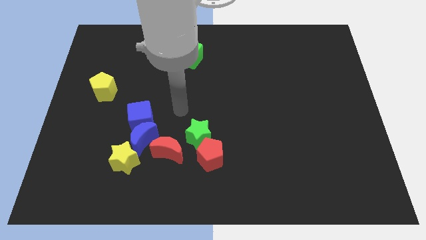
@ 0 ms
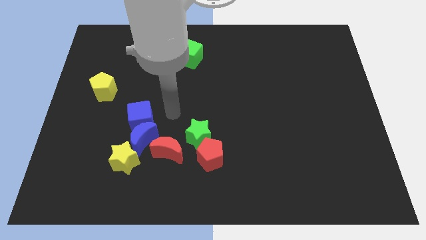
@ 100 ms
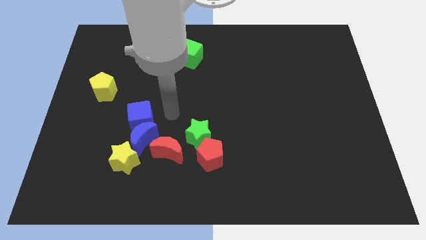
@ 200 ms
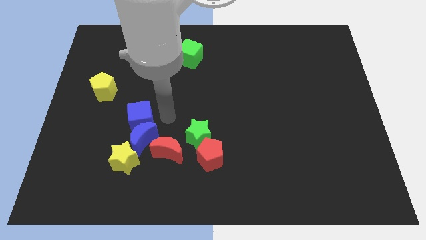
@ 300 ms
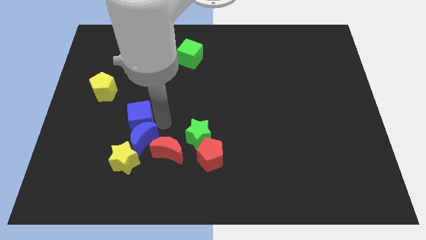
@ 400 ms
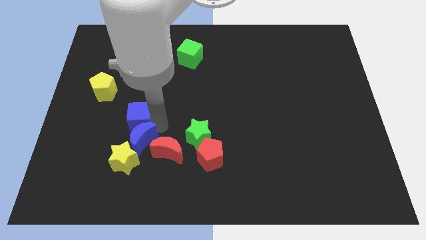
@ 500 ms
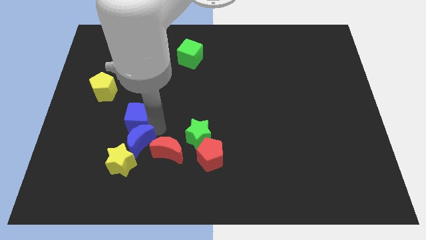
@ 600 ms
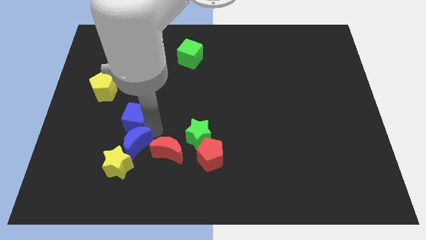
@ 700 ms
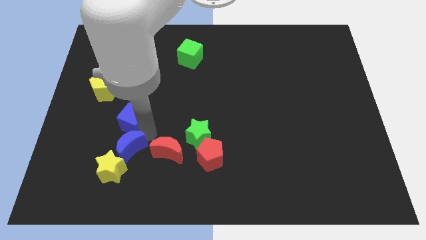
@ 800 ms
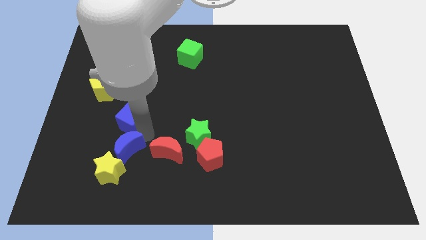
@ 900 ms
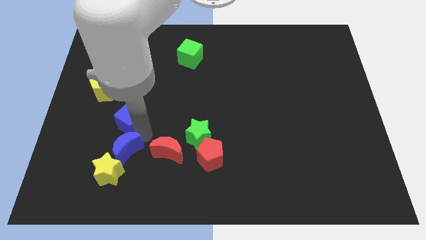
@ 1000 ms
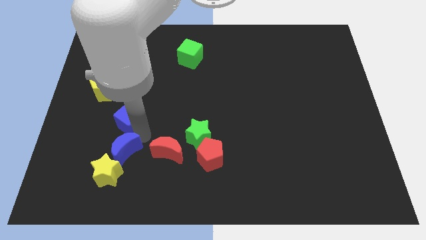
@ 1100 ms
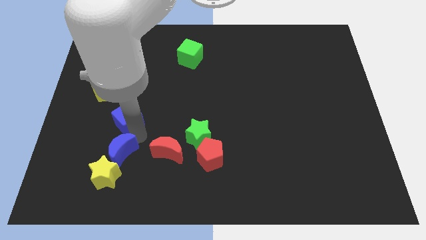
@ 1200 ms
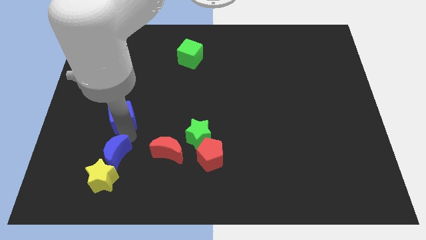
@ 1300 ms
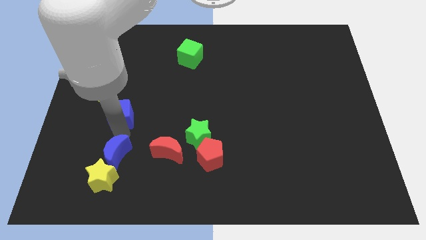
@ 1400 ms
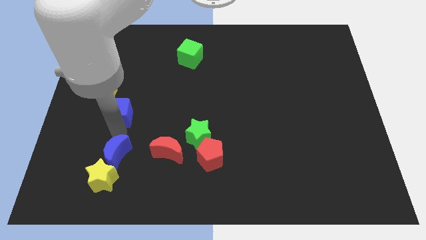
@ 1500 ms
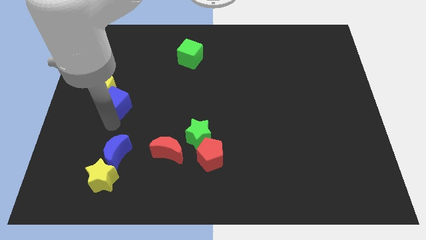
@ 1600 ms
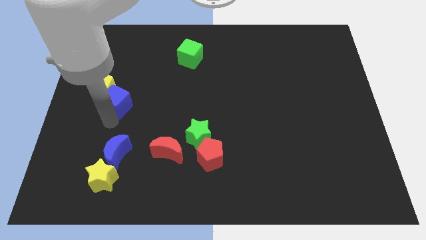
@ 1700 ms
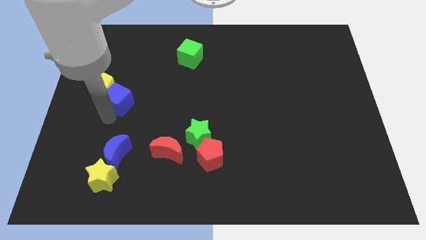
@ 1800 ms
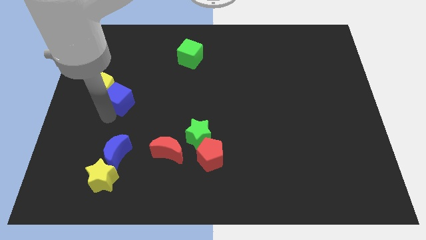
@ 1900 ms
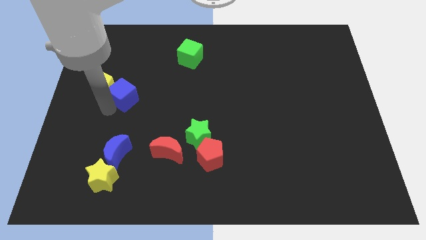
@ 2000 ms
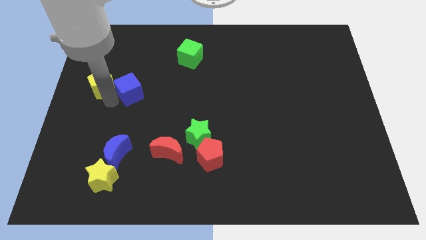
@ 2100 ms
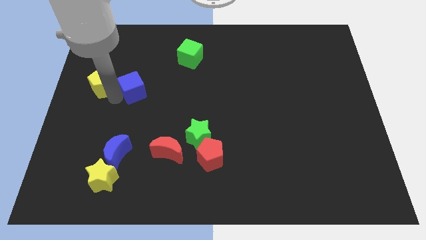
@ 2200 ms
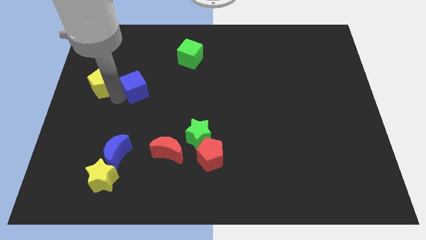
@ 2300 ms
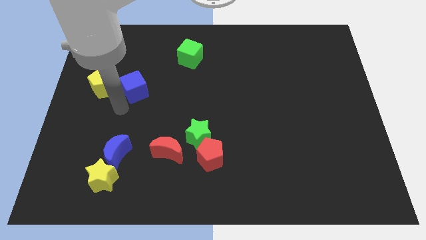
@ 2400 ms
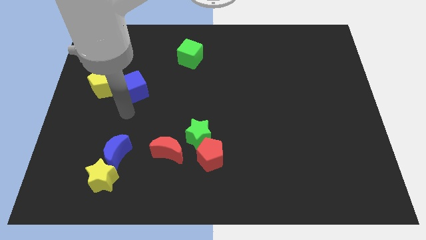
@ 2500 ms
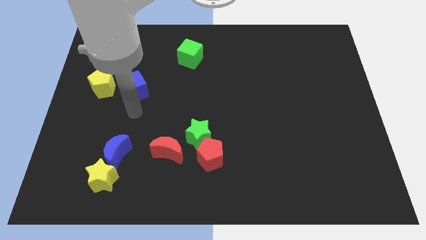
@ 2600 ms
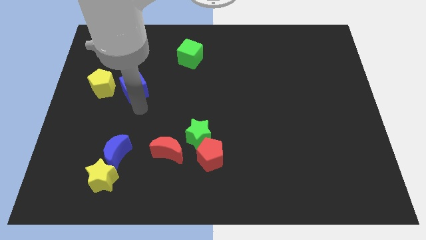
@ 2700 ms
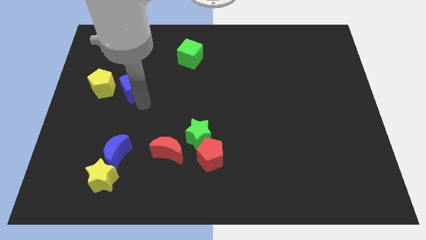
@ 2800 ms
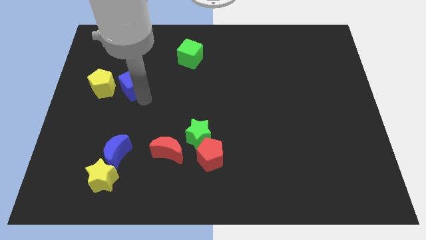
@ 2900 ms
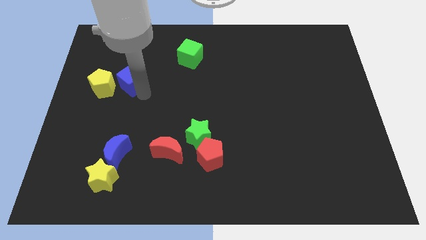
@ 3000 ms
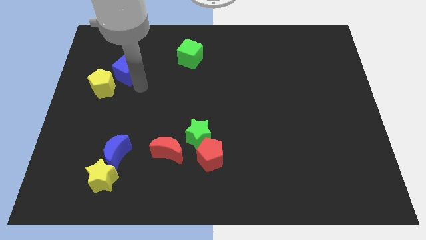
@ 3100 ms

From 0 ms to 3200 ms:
place the blue cube to the right side of the yellow pentagon

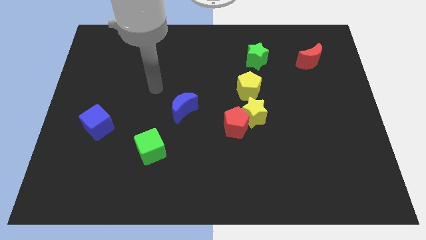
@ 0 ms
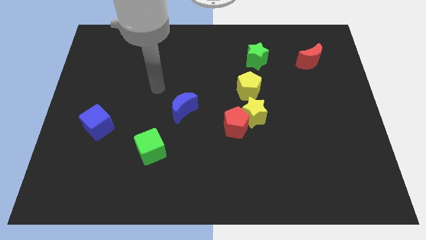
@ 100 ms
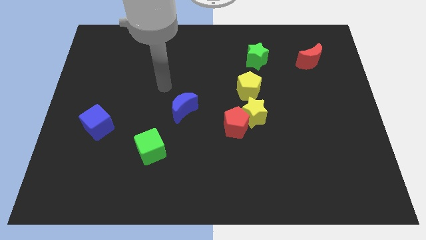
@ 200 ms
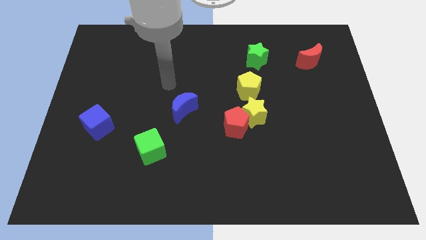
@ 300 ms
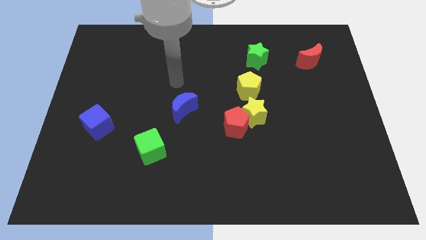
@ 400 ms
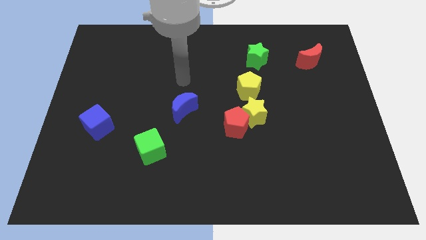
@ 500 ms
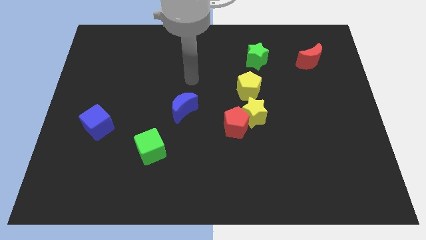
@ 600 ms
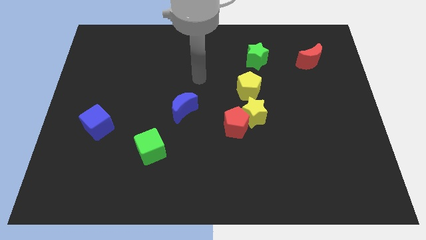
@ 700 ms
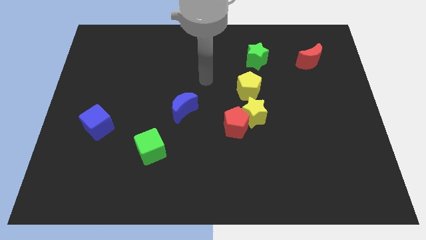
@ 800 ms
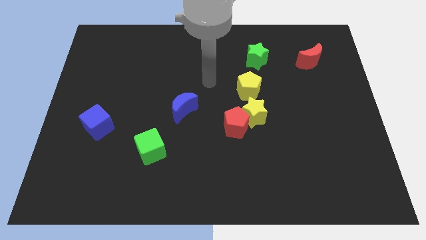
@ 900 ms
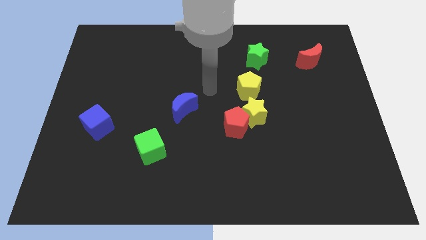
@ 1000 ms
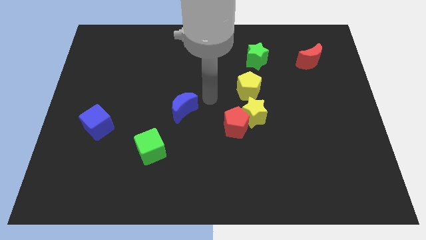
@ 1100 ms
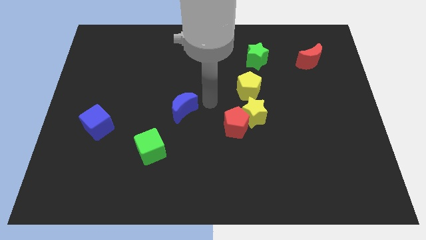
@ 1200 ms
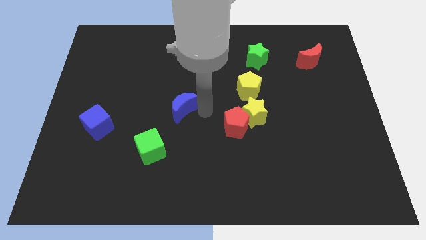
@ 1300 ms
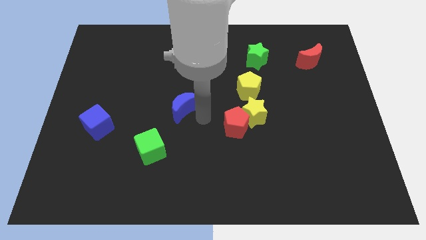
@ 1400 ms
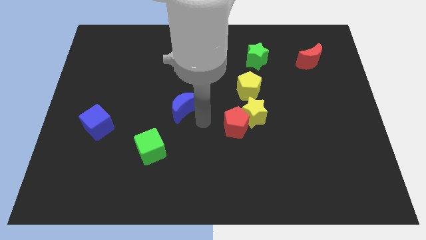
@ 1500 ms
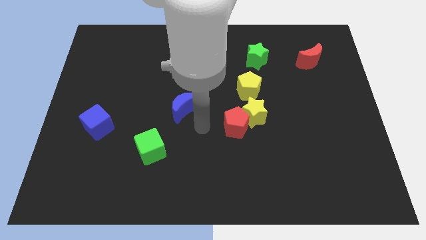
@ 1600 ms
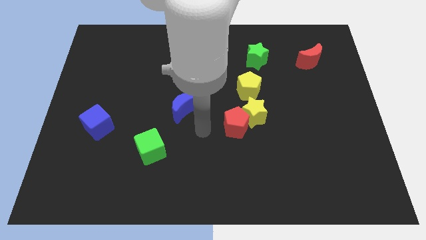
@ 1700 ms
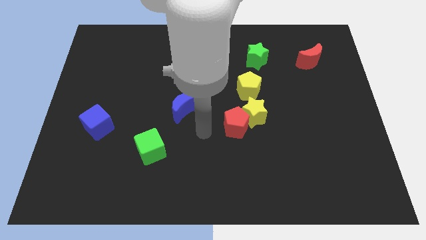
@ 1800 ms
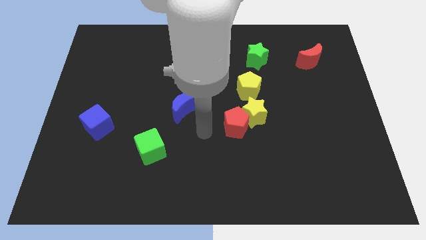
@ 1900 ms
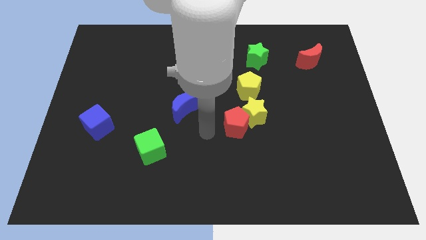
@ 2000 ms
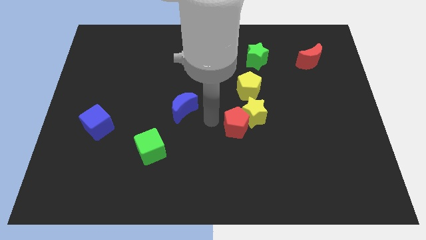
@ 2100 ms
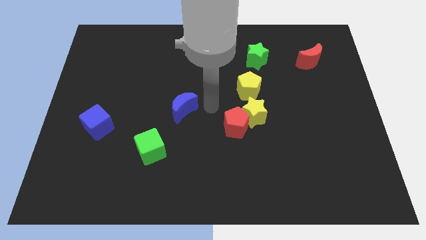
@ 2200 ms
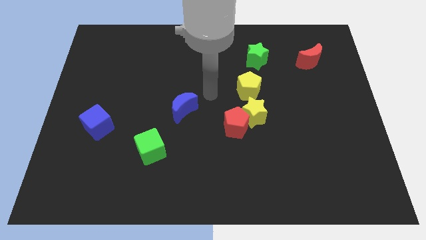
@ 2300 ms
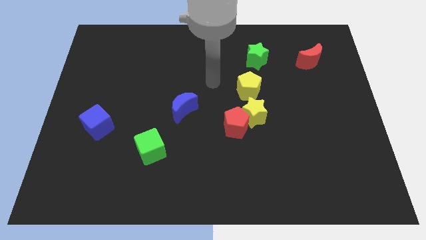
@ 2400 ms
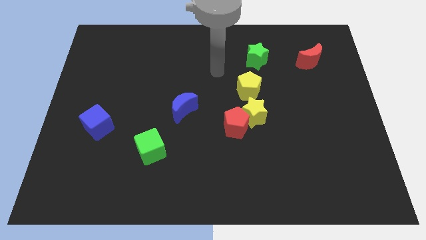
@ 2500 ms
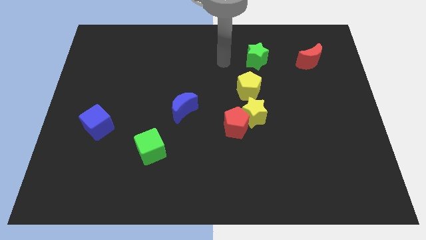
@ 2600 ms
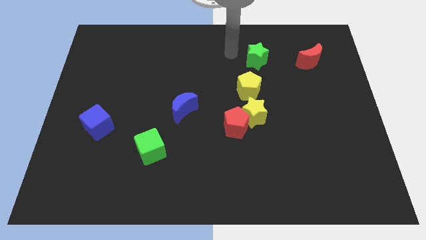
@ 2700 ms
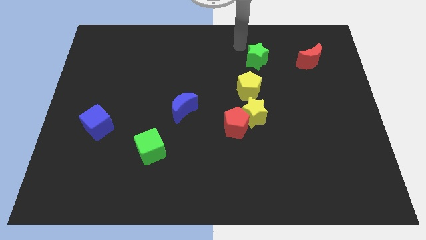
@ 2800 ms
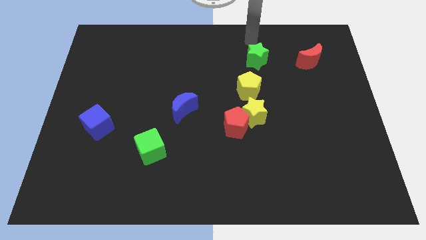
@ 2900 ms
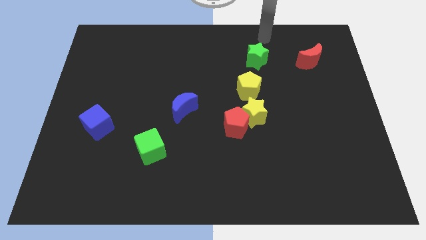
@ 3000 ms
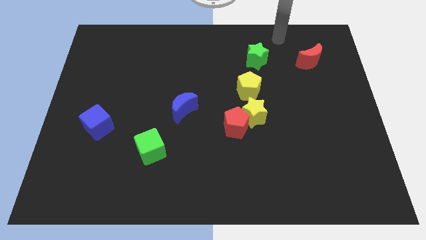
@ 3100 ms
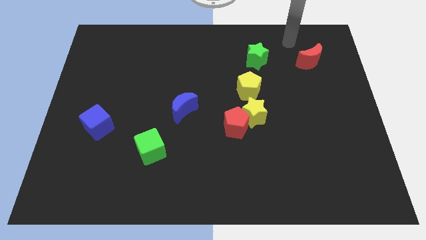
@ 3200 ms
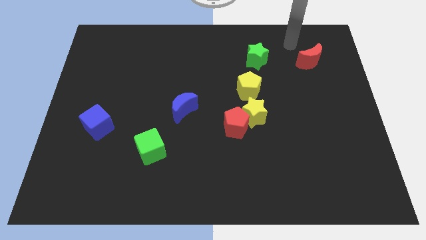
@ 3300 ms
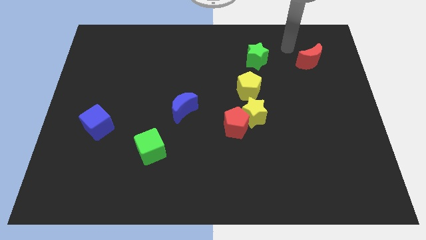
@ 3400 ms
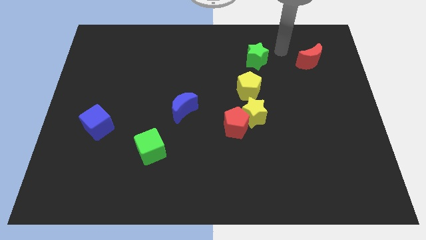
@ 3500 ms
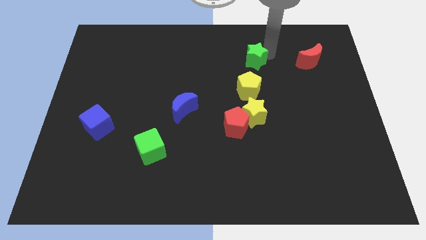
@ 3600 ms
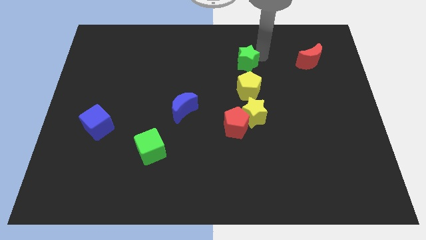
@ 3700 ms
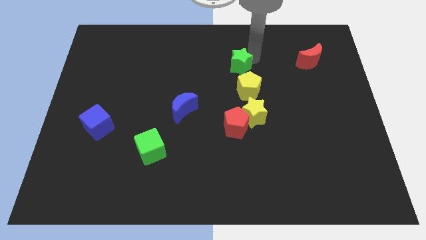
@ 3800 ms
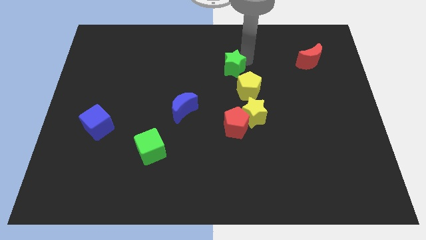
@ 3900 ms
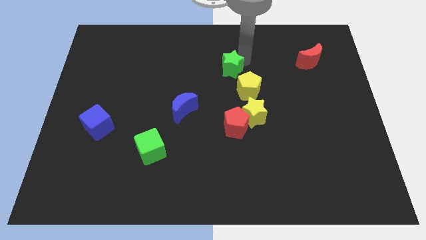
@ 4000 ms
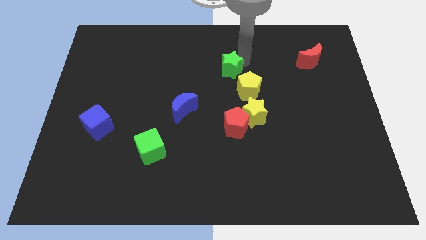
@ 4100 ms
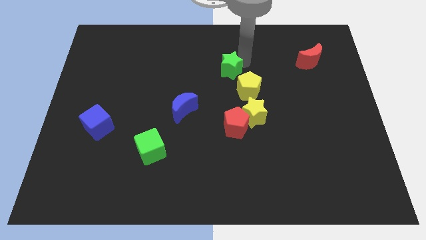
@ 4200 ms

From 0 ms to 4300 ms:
push green star slightly to the center of the board

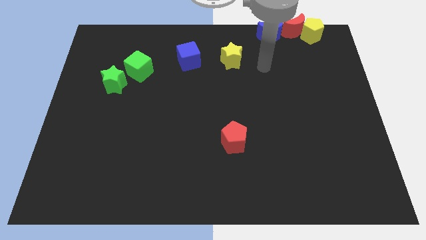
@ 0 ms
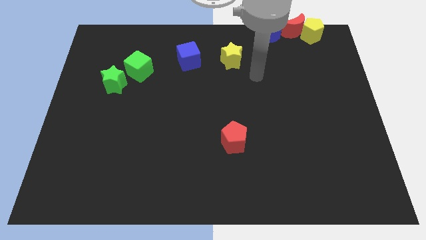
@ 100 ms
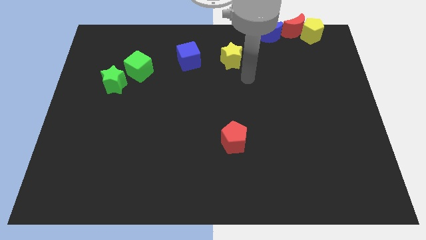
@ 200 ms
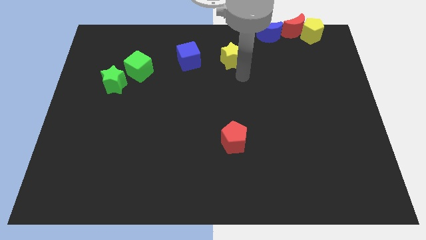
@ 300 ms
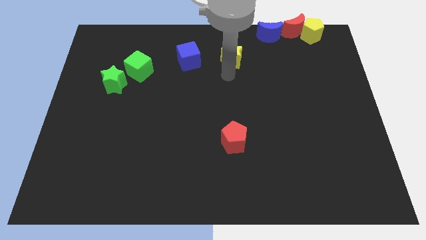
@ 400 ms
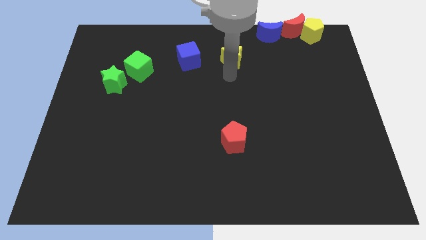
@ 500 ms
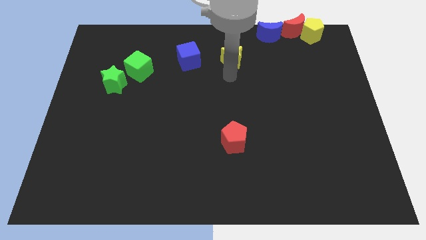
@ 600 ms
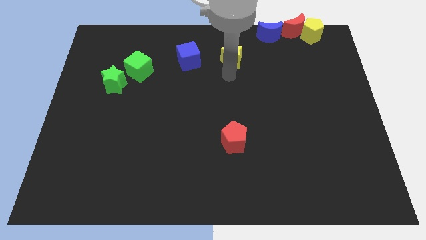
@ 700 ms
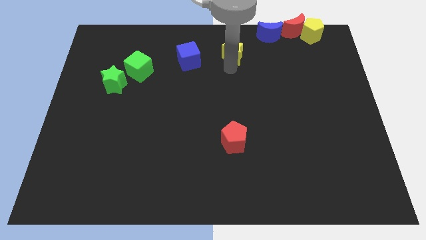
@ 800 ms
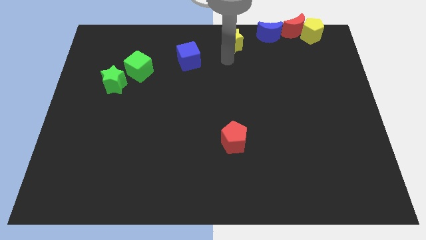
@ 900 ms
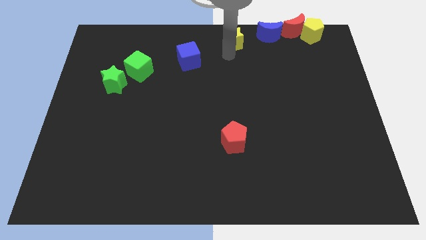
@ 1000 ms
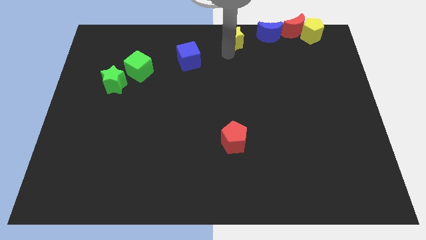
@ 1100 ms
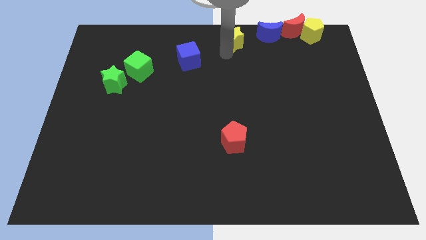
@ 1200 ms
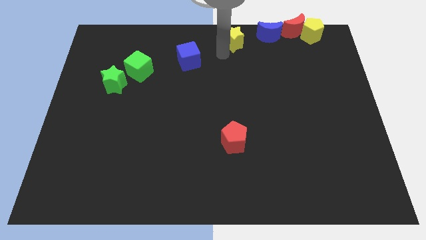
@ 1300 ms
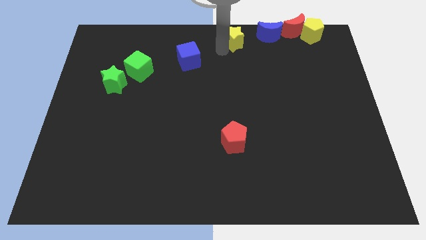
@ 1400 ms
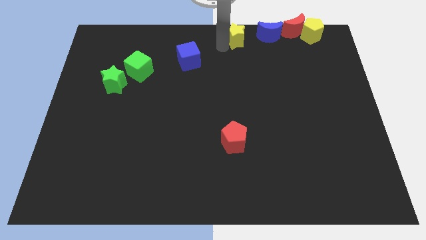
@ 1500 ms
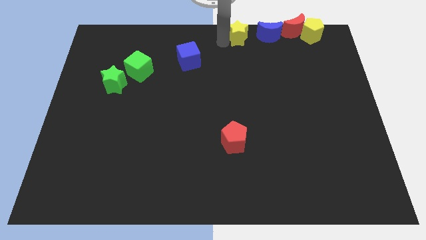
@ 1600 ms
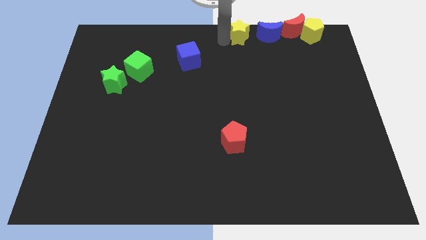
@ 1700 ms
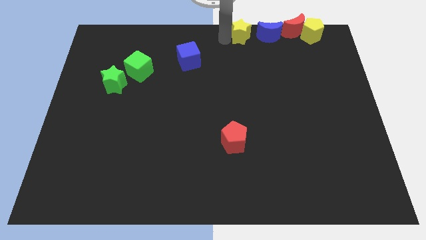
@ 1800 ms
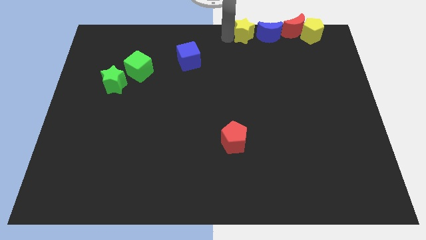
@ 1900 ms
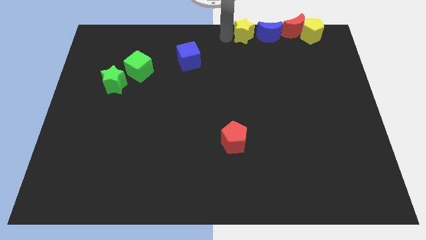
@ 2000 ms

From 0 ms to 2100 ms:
move the yellow star towards the left side of the blue crescent
